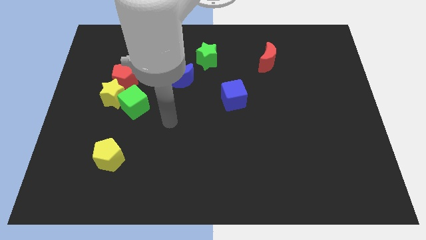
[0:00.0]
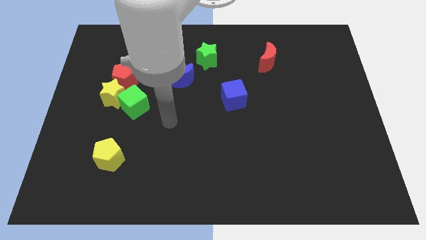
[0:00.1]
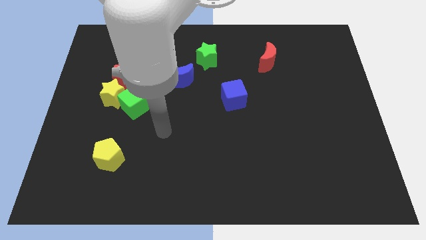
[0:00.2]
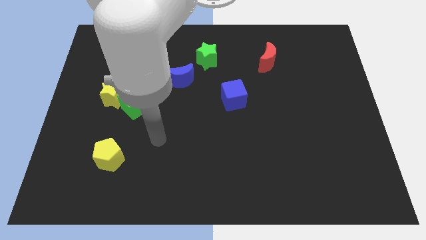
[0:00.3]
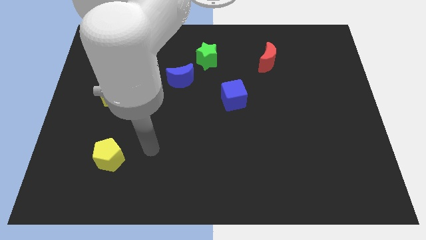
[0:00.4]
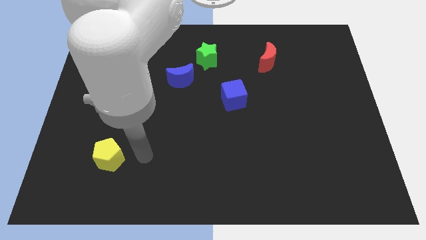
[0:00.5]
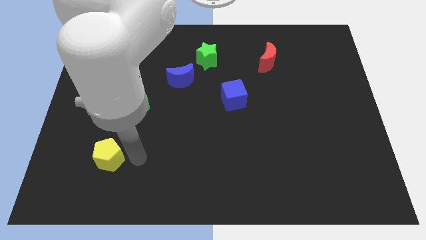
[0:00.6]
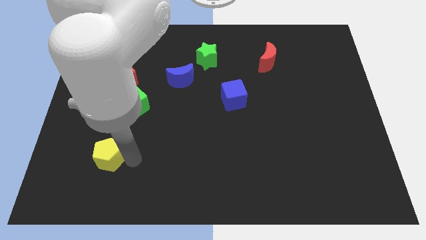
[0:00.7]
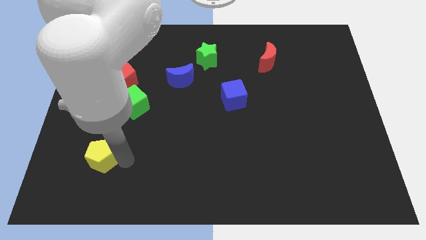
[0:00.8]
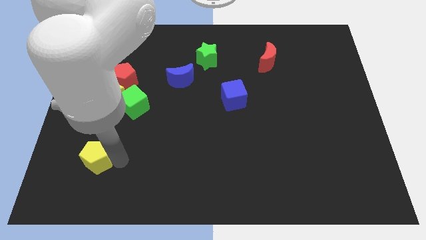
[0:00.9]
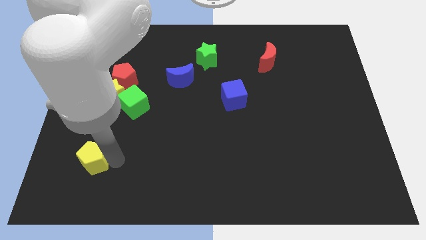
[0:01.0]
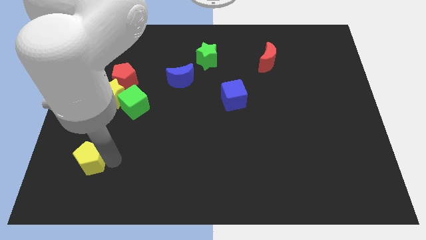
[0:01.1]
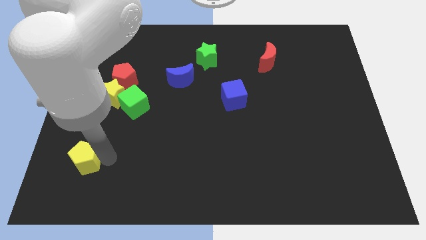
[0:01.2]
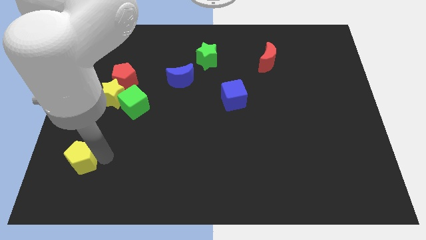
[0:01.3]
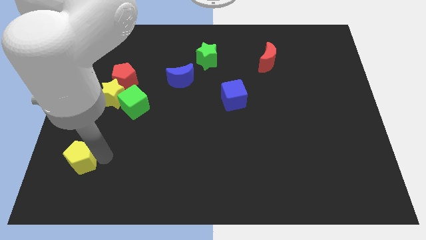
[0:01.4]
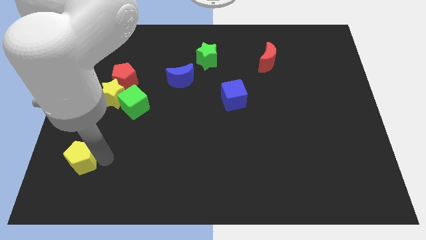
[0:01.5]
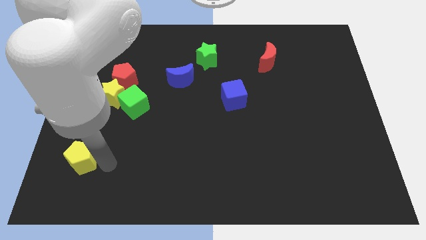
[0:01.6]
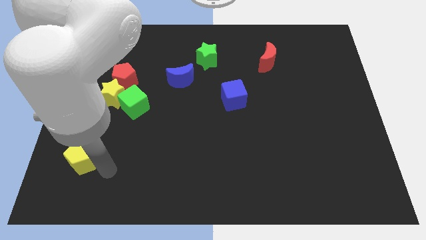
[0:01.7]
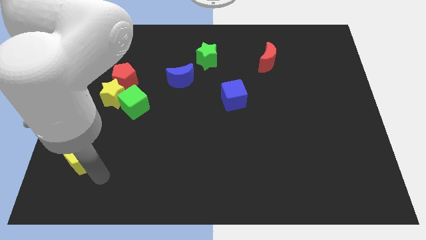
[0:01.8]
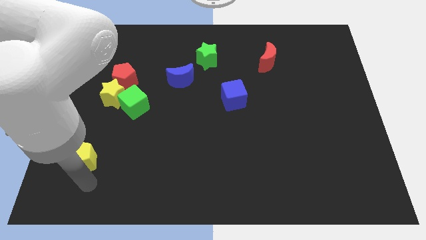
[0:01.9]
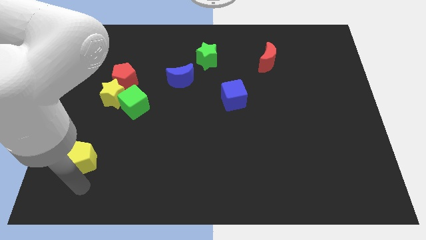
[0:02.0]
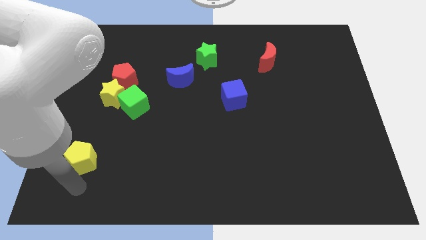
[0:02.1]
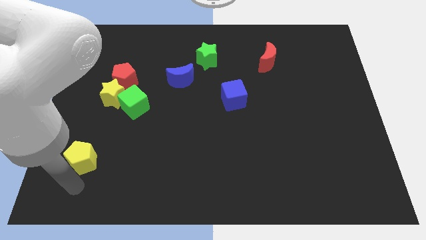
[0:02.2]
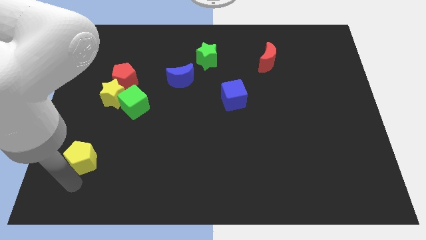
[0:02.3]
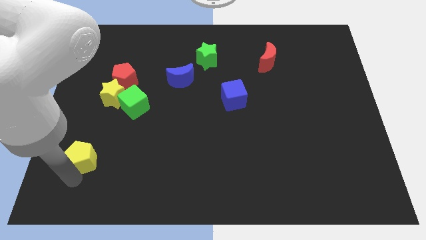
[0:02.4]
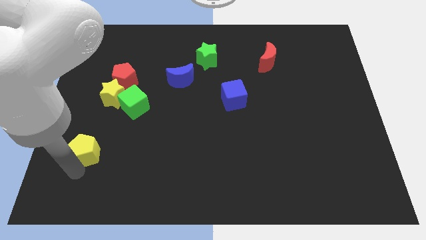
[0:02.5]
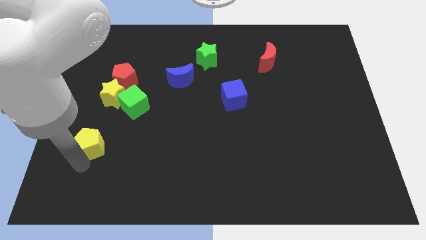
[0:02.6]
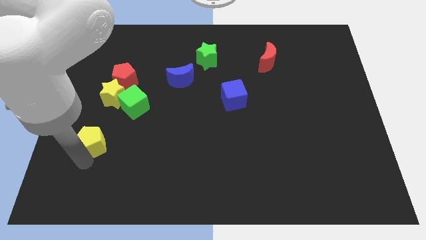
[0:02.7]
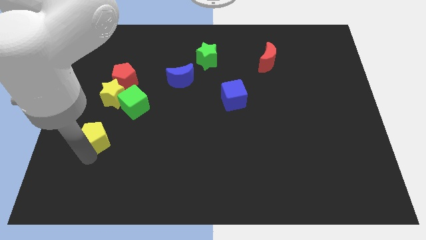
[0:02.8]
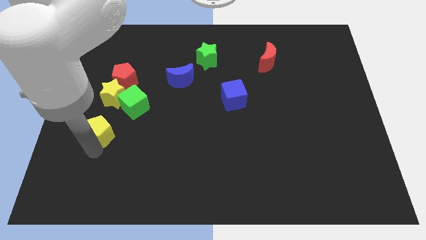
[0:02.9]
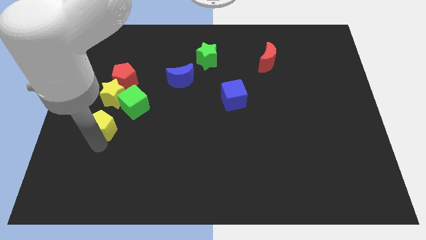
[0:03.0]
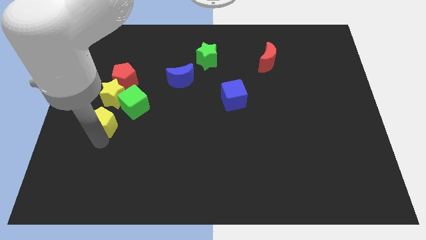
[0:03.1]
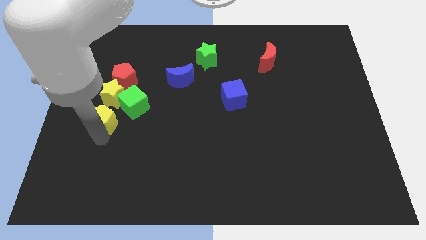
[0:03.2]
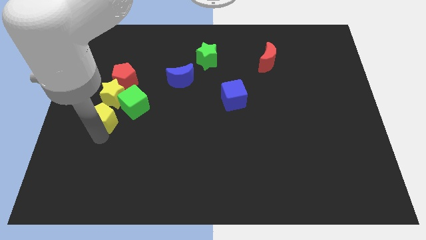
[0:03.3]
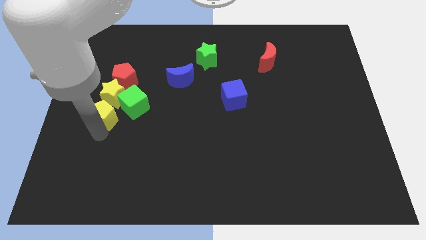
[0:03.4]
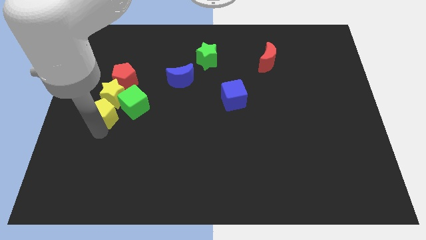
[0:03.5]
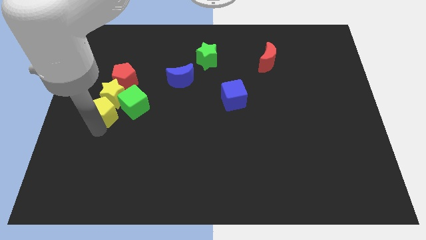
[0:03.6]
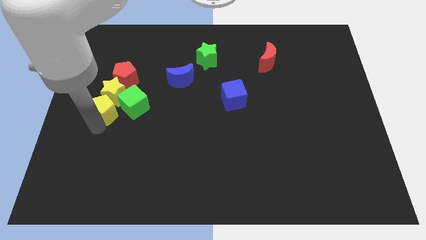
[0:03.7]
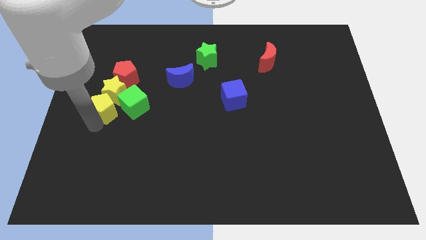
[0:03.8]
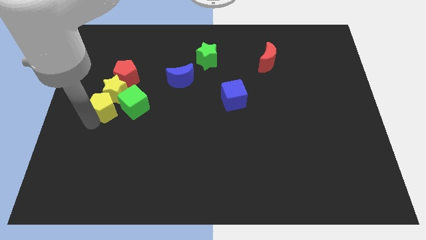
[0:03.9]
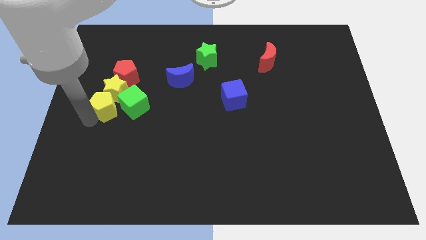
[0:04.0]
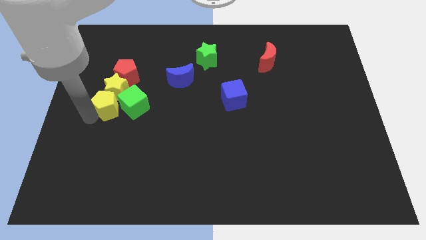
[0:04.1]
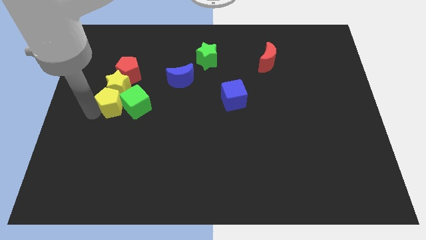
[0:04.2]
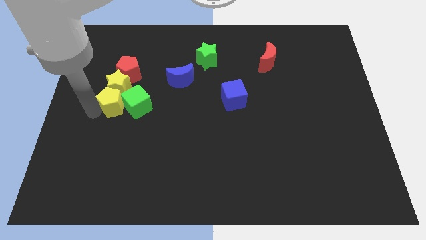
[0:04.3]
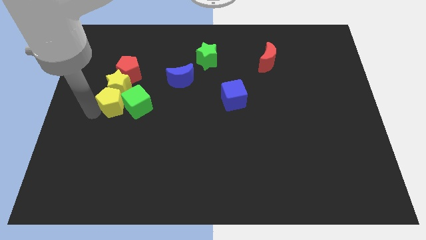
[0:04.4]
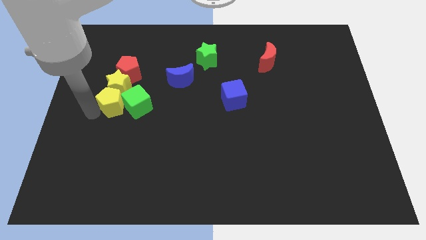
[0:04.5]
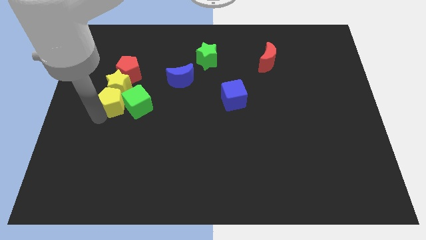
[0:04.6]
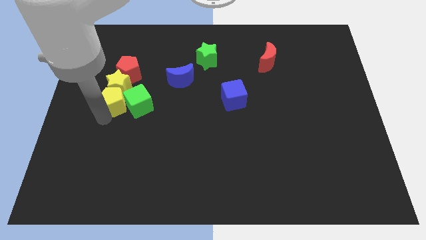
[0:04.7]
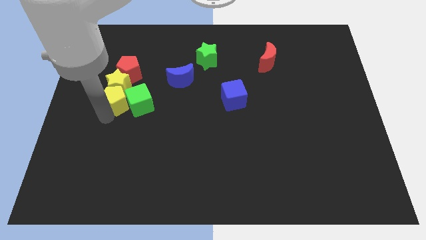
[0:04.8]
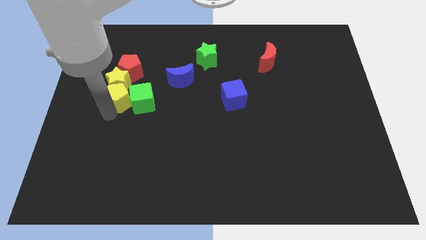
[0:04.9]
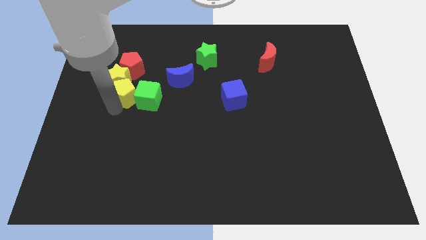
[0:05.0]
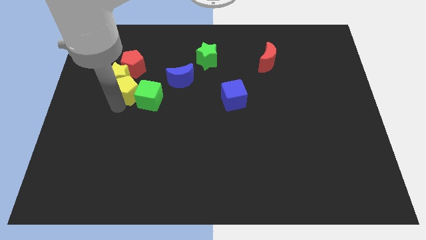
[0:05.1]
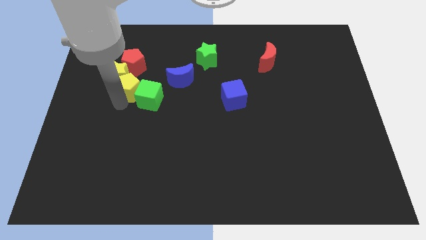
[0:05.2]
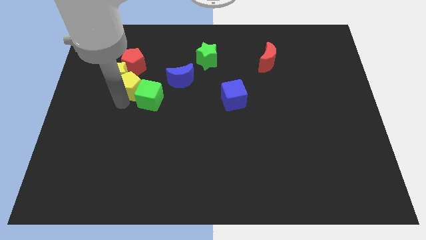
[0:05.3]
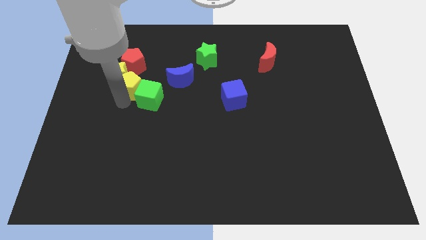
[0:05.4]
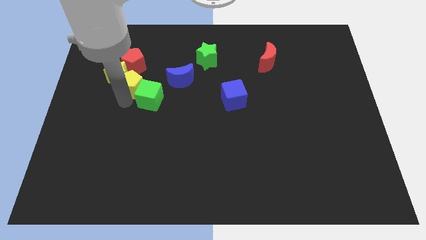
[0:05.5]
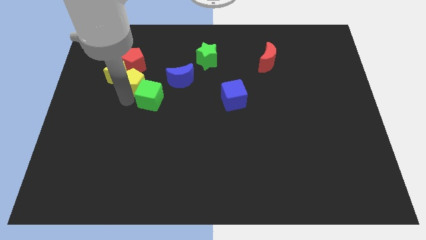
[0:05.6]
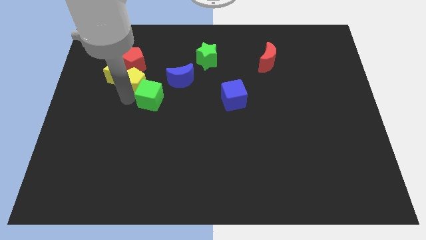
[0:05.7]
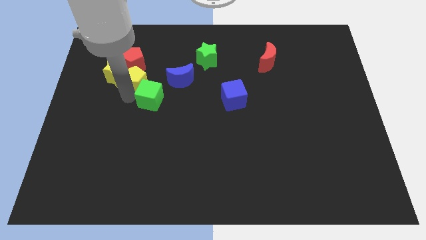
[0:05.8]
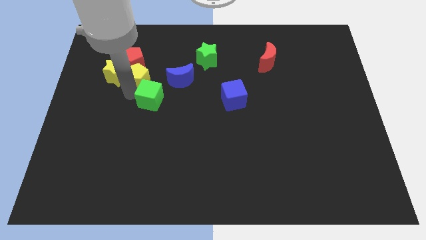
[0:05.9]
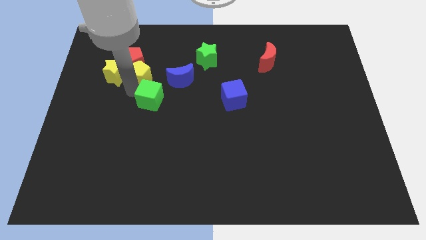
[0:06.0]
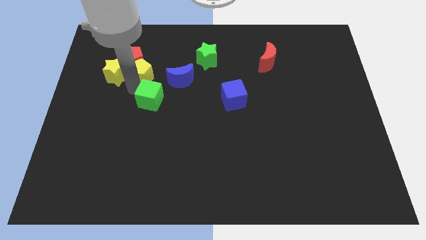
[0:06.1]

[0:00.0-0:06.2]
put the yellow pentagon next to the red pentagon

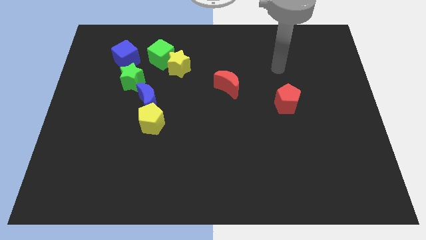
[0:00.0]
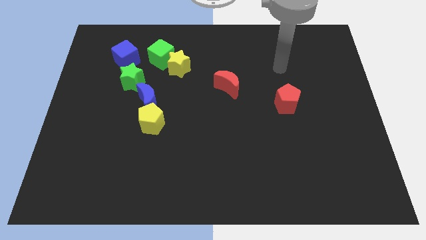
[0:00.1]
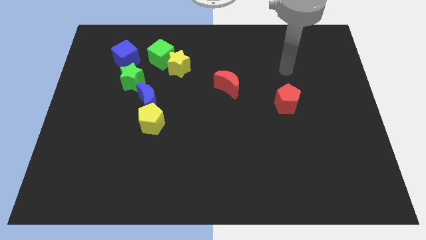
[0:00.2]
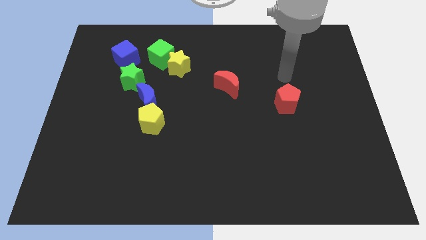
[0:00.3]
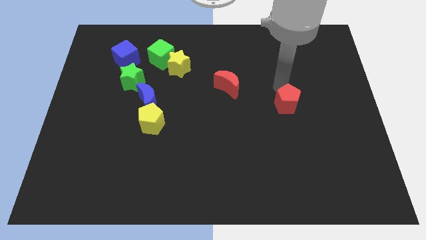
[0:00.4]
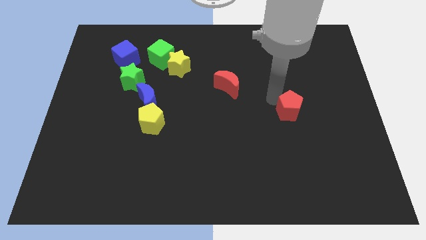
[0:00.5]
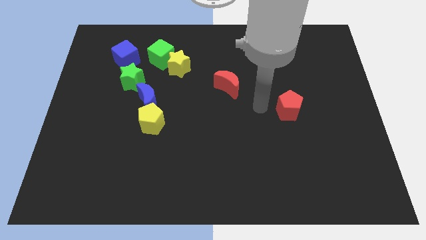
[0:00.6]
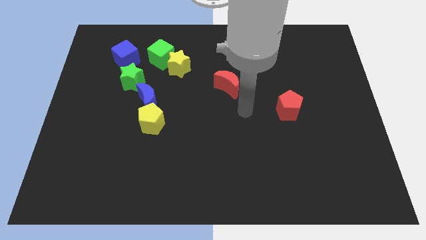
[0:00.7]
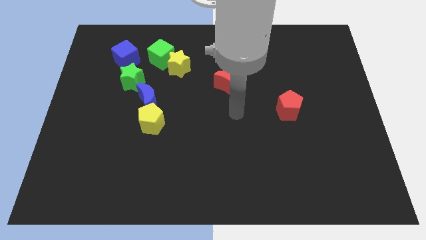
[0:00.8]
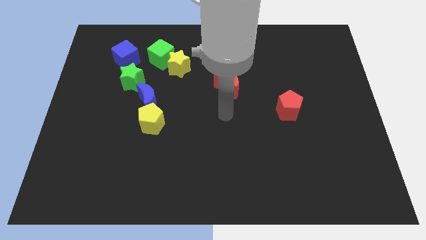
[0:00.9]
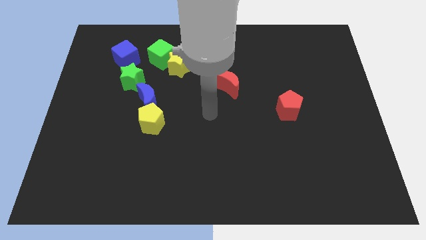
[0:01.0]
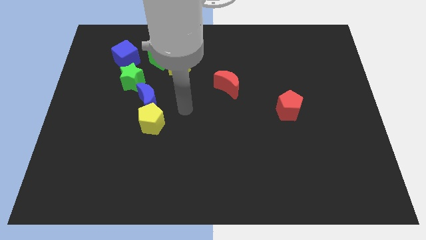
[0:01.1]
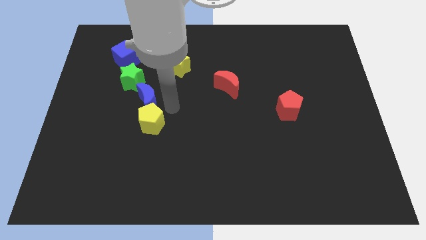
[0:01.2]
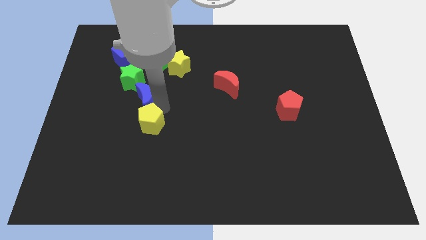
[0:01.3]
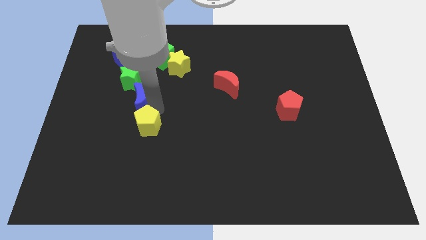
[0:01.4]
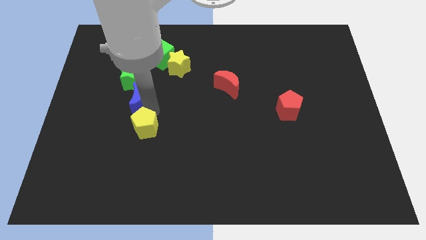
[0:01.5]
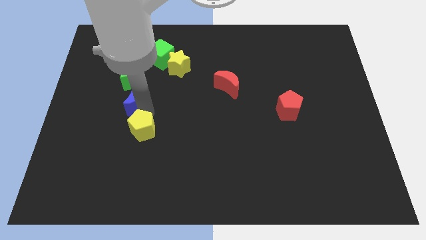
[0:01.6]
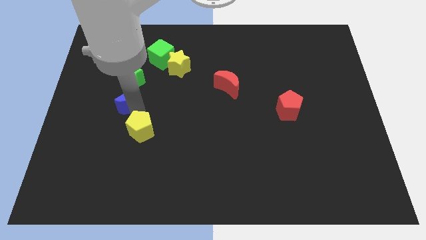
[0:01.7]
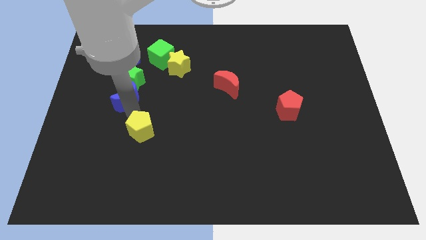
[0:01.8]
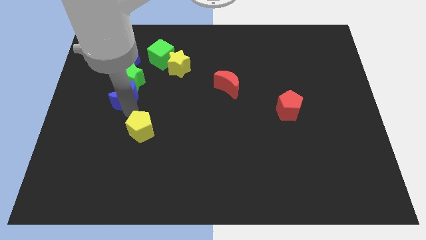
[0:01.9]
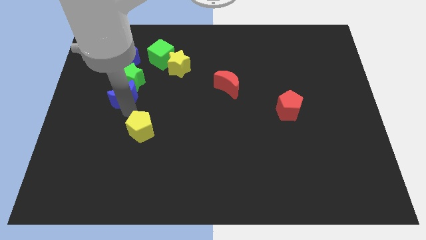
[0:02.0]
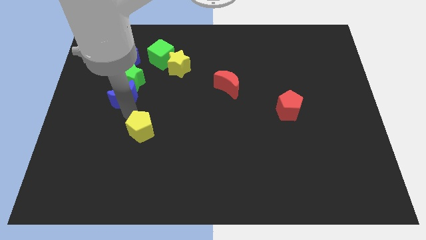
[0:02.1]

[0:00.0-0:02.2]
put the blue moon next to the green star
